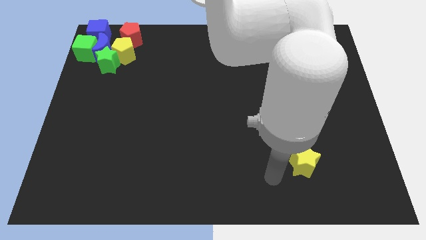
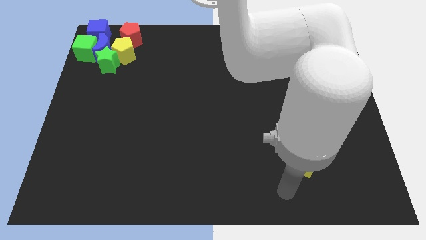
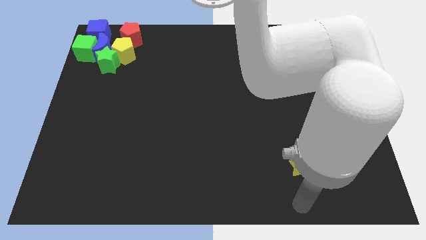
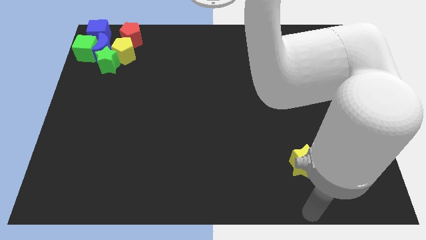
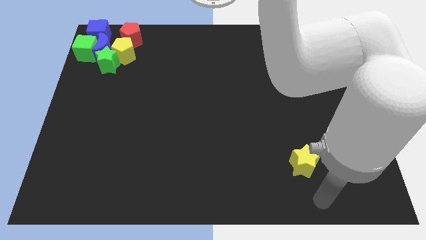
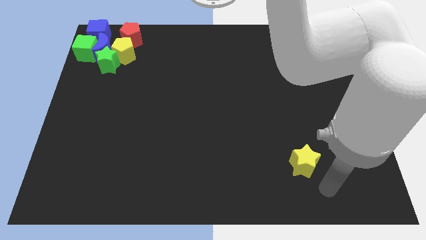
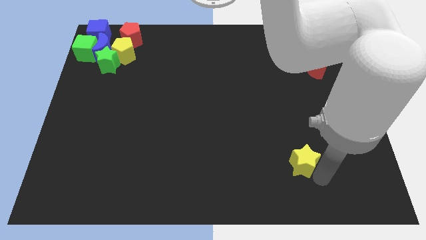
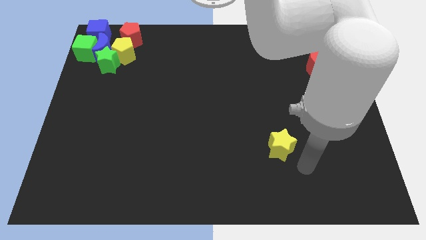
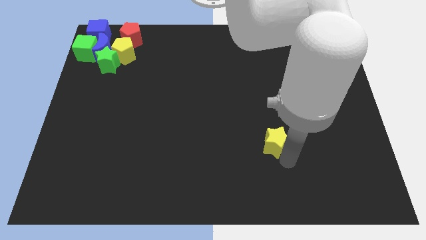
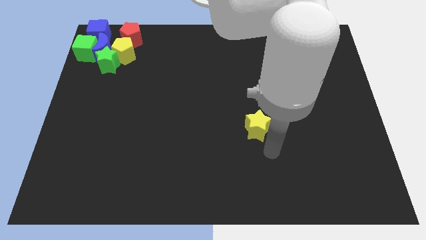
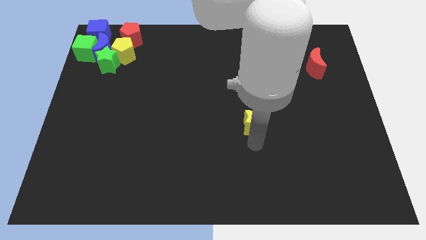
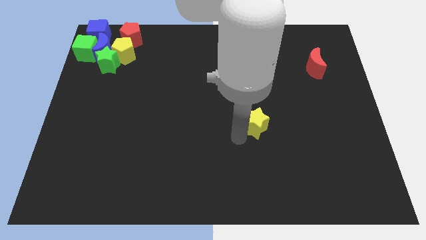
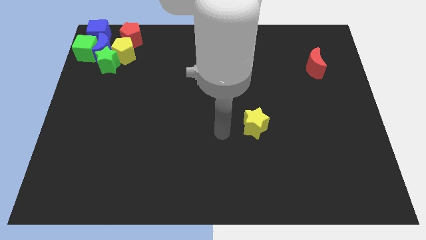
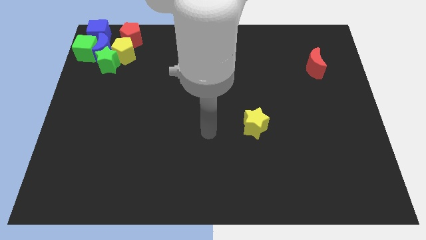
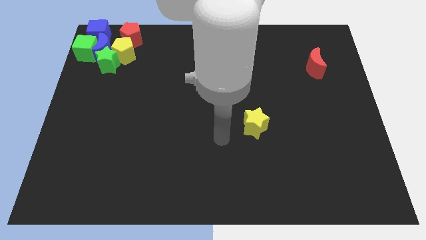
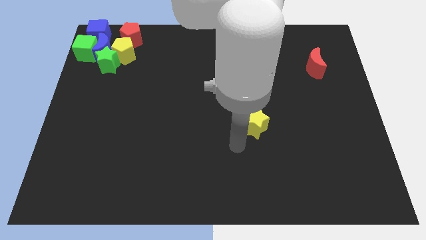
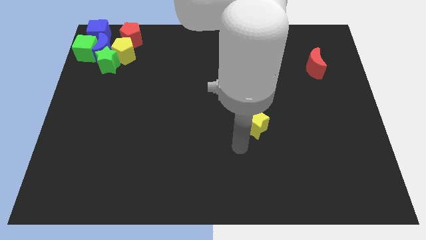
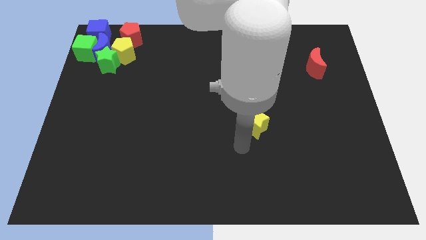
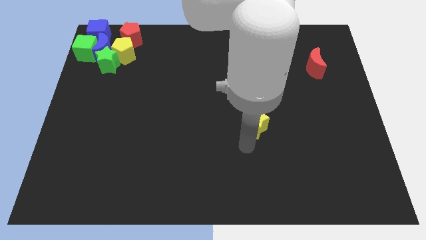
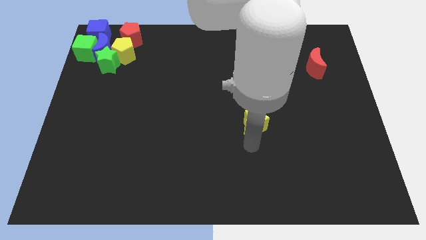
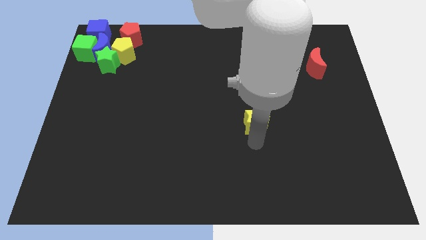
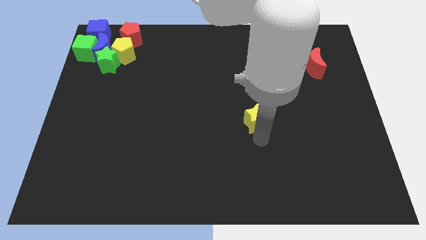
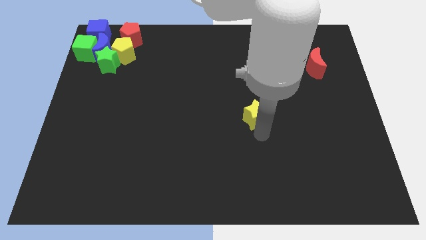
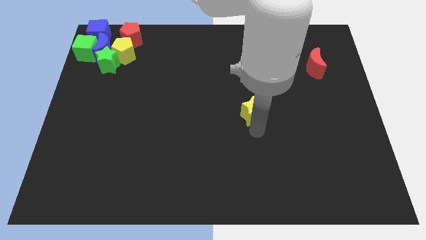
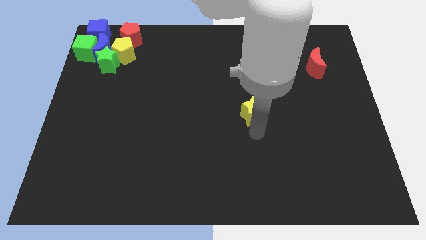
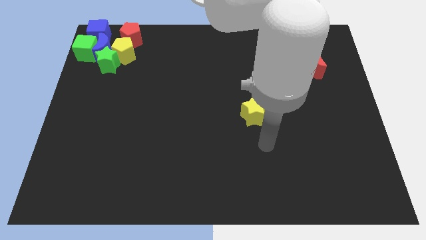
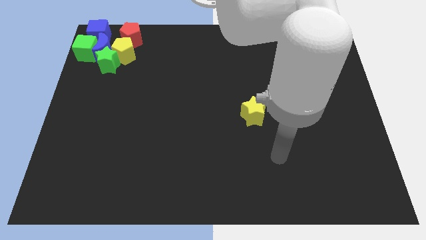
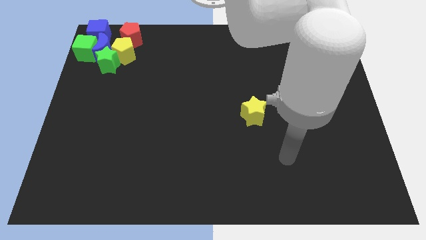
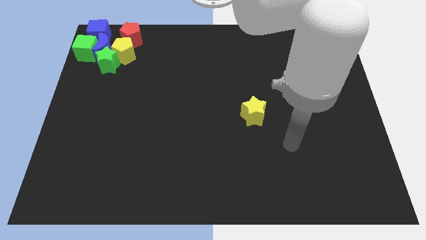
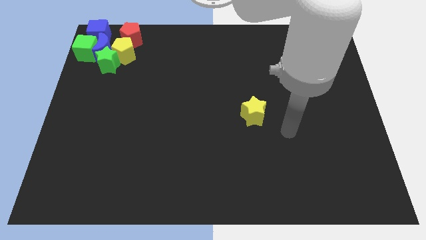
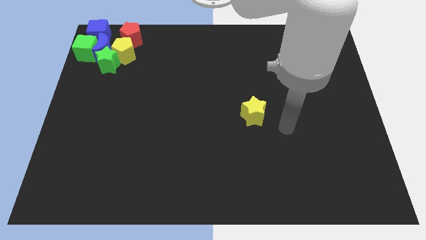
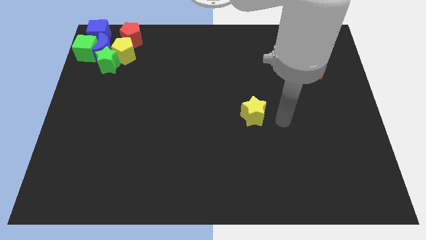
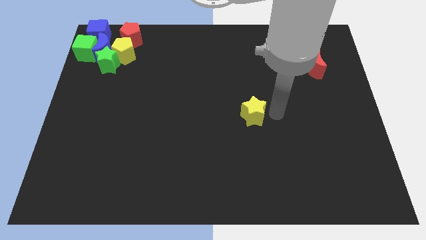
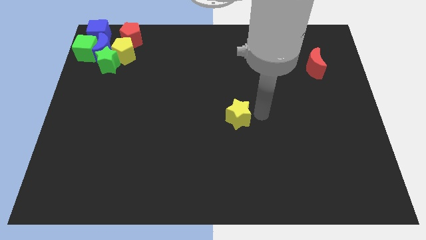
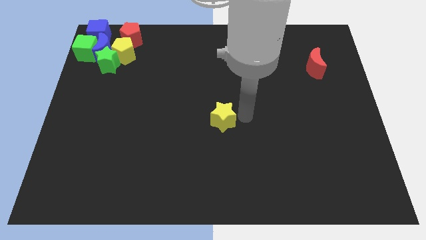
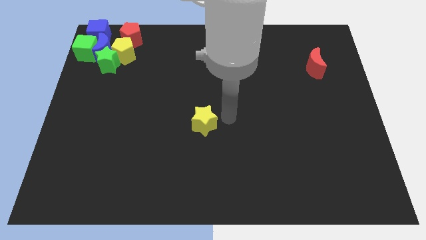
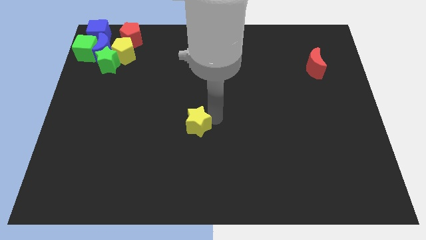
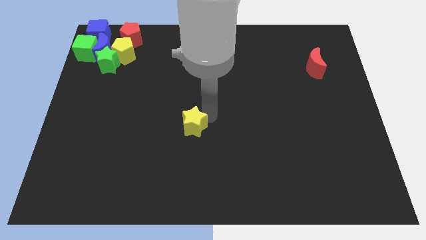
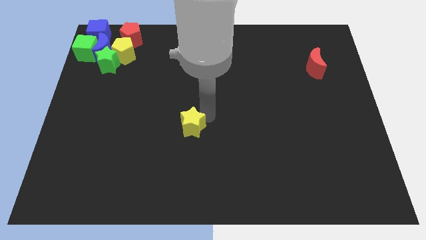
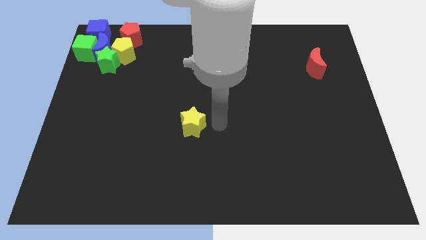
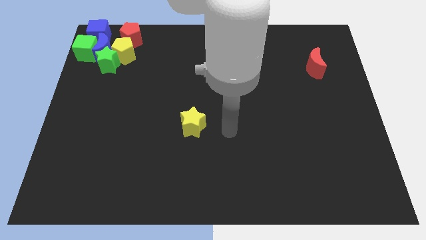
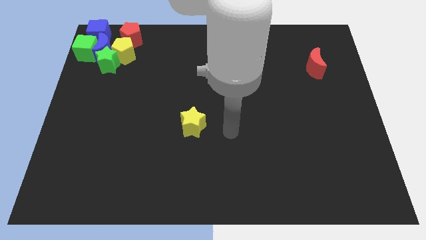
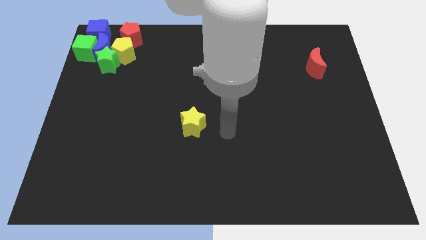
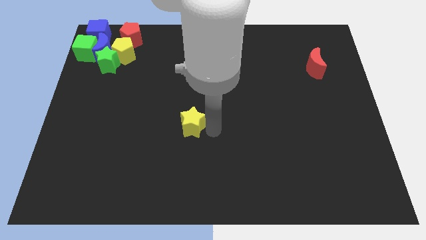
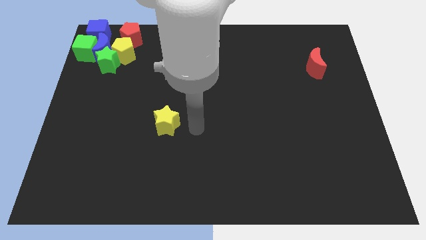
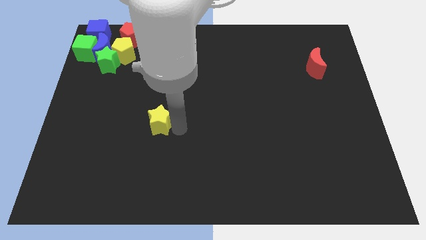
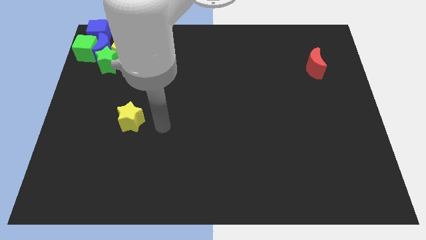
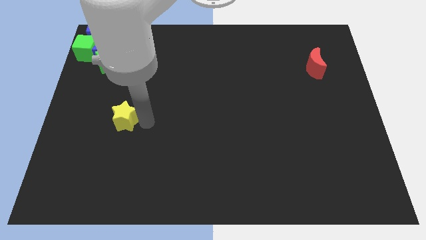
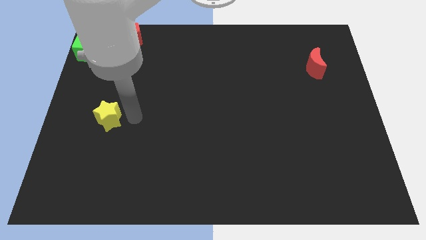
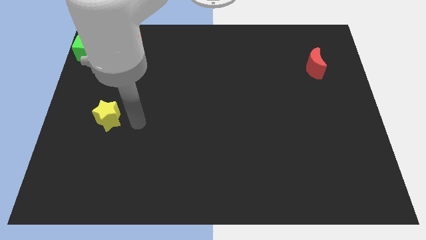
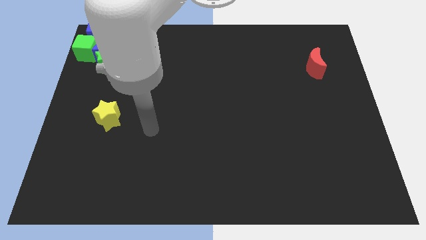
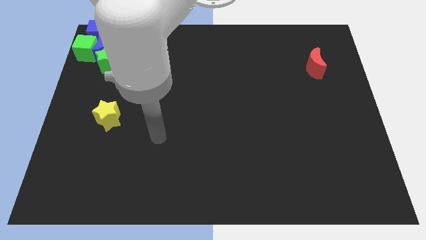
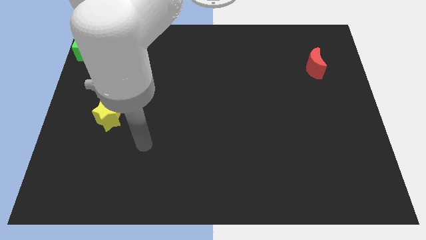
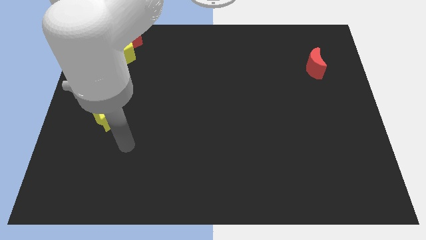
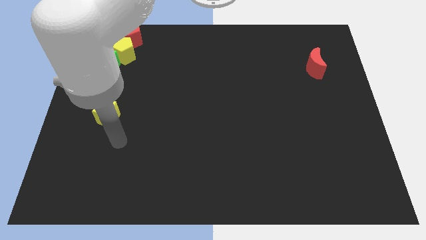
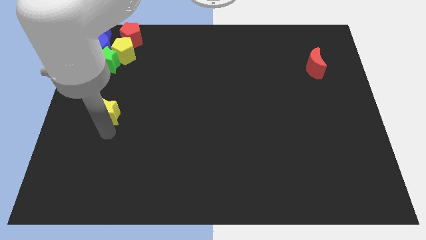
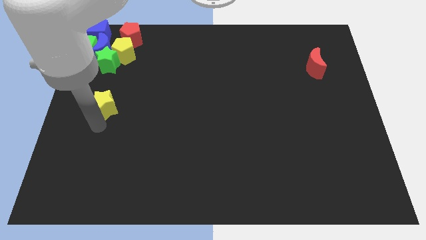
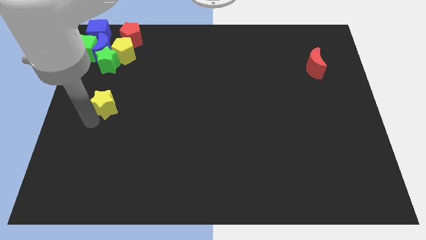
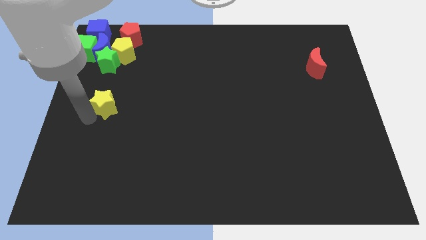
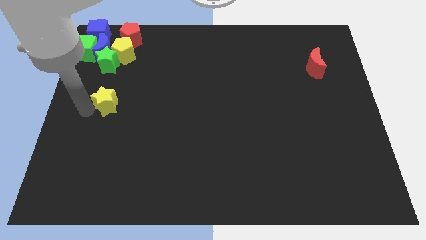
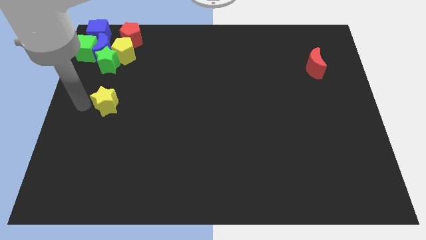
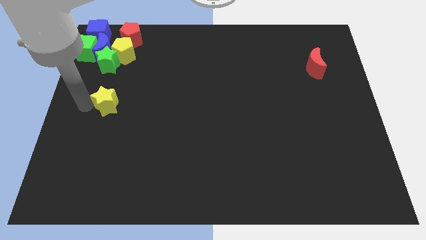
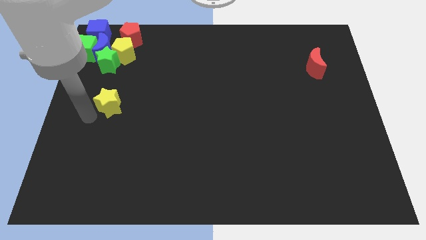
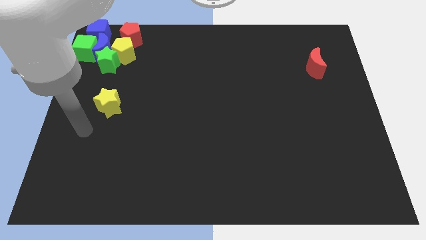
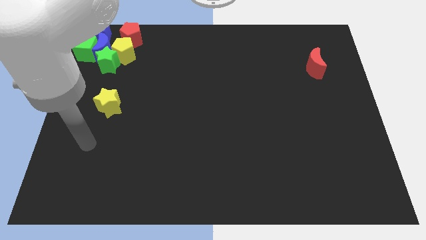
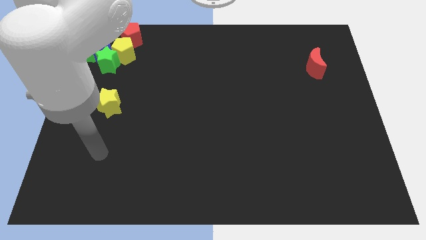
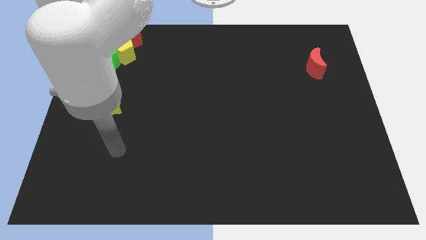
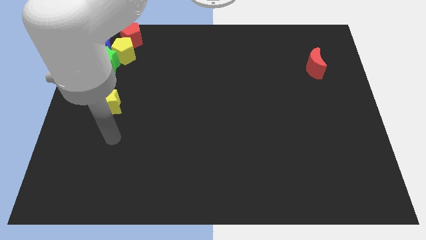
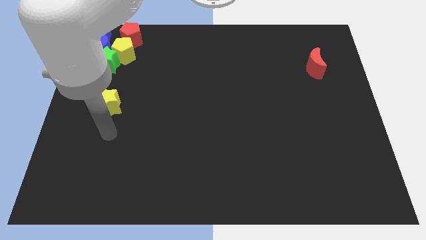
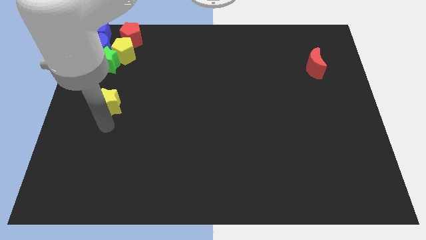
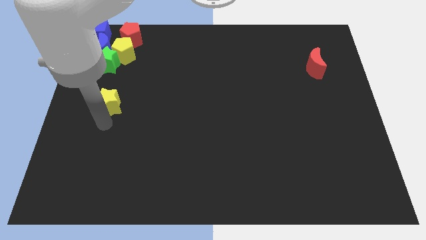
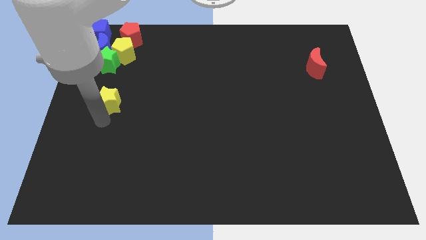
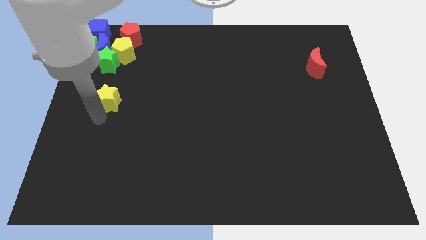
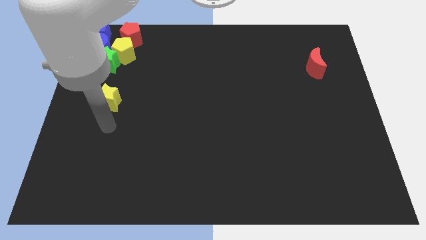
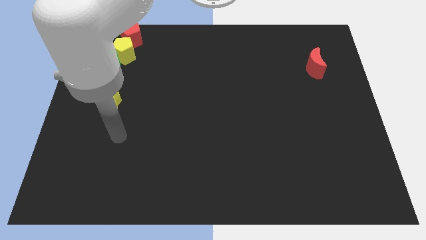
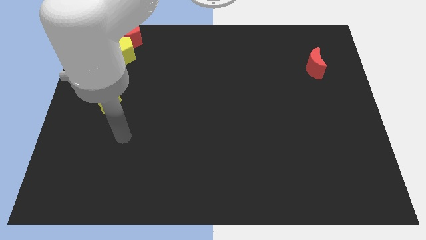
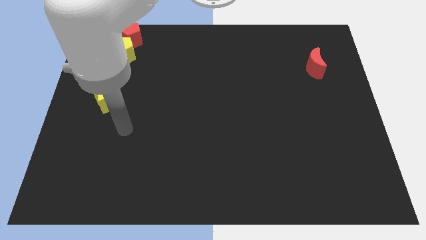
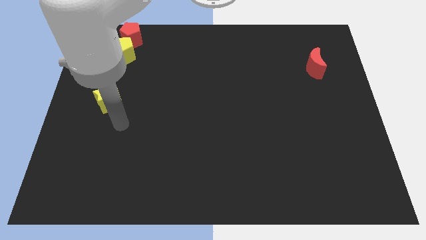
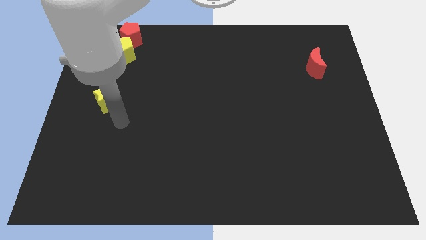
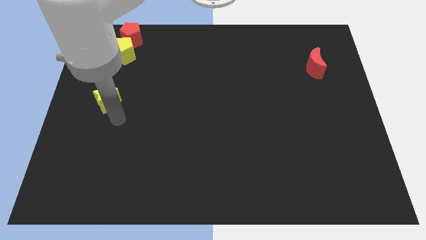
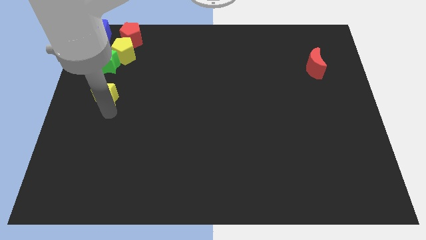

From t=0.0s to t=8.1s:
slide yellow star below the green star

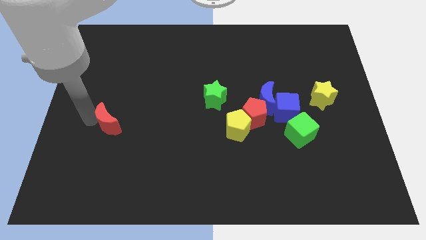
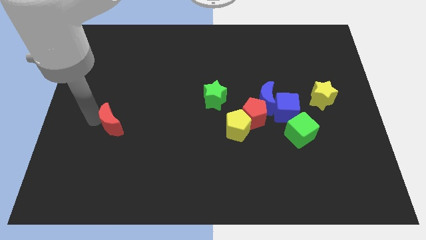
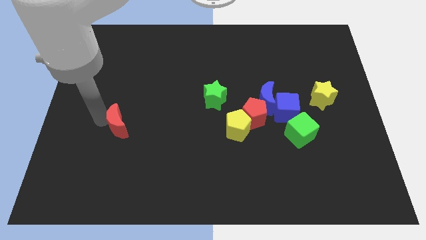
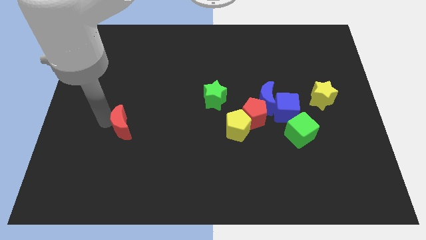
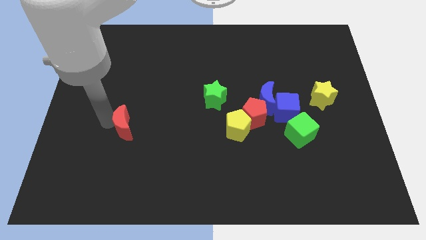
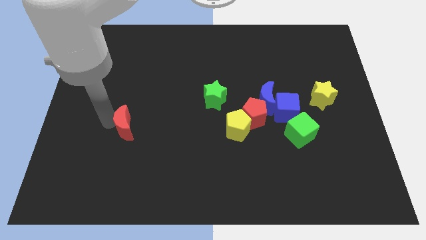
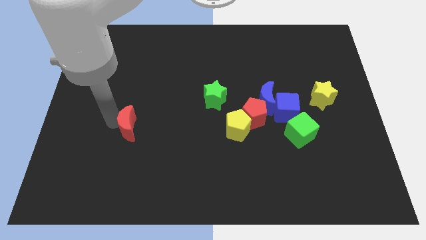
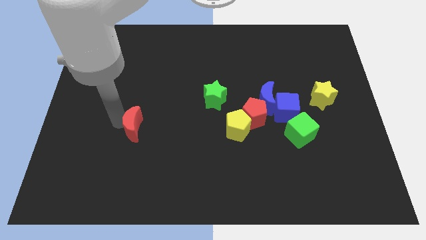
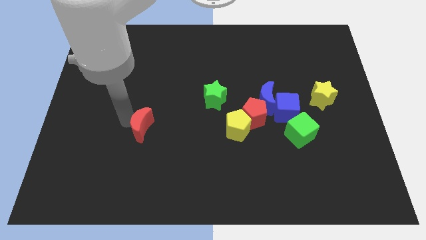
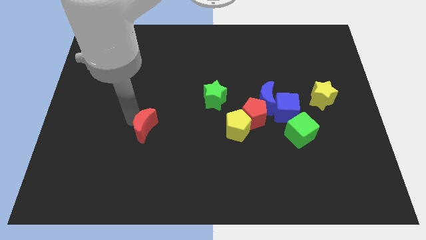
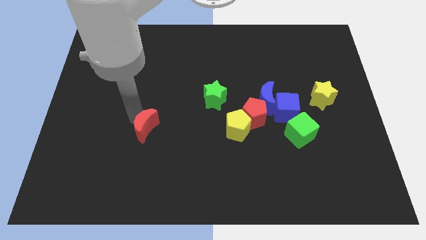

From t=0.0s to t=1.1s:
place red moon parallel to yellow pentagon
